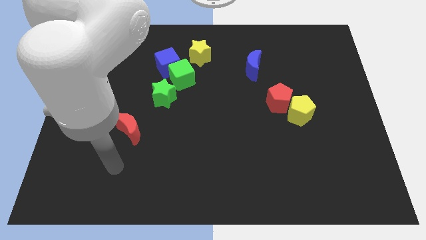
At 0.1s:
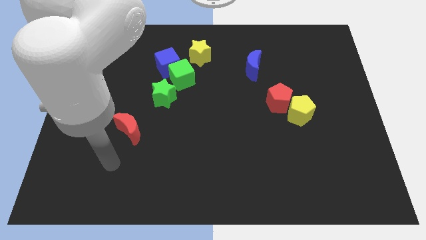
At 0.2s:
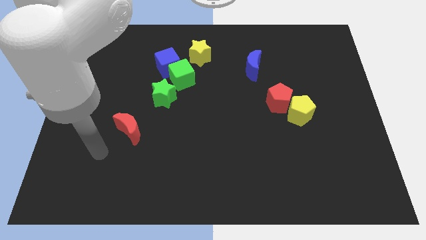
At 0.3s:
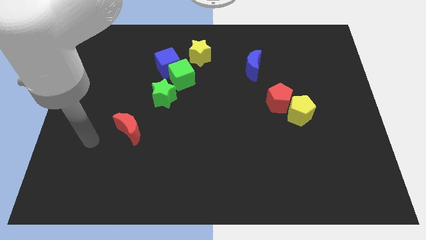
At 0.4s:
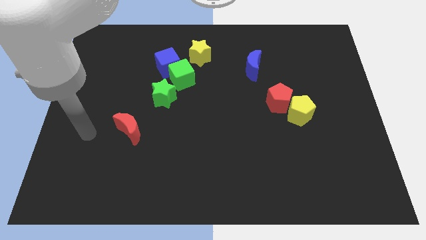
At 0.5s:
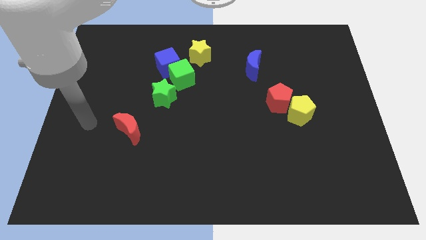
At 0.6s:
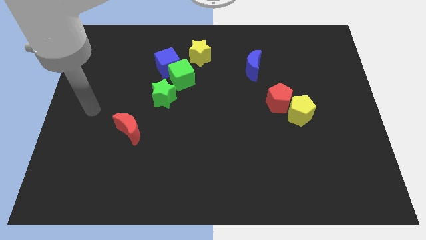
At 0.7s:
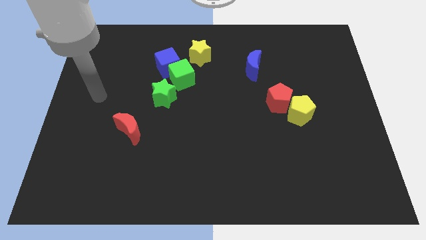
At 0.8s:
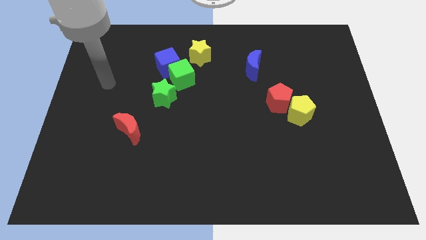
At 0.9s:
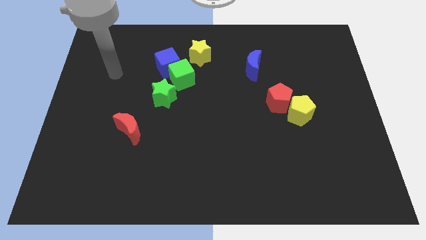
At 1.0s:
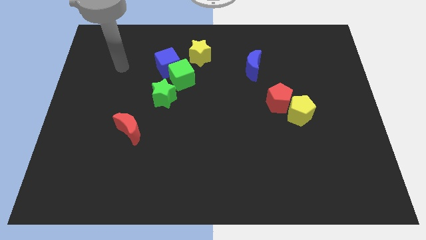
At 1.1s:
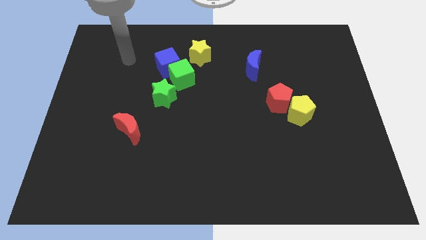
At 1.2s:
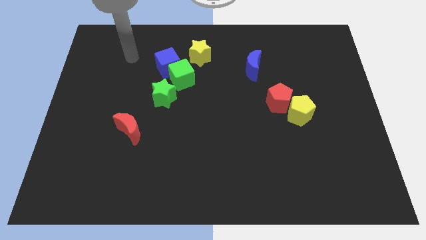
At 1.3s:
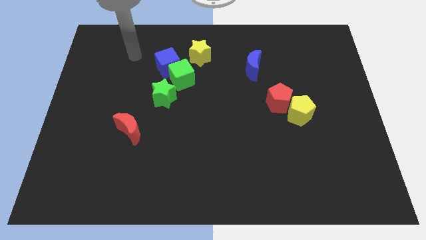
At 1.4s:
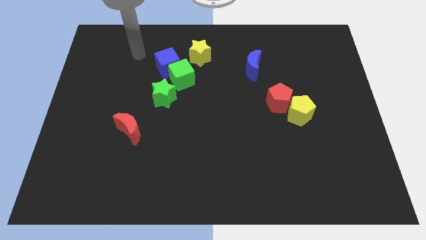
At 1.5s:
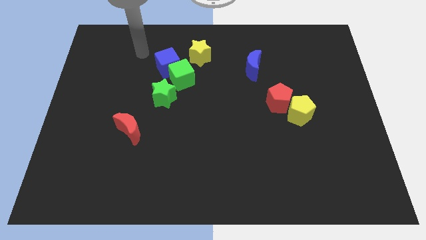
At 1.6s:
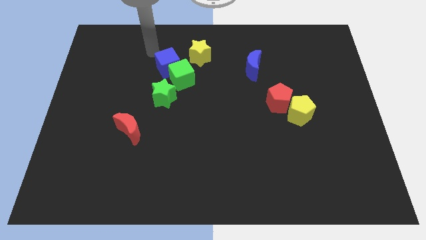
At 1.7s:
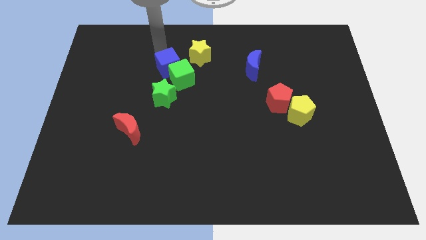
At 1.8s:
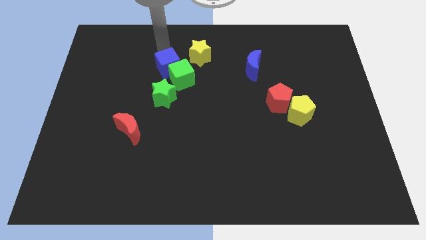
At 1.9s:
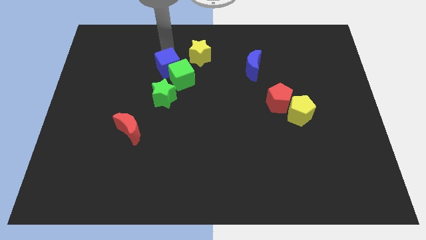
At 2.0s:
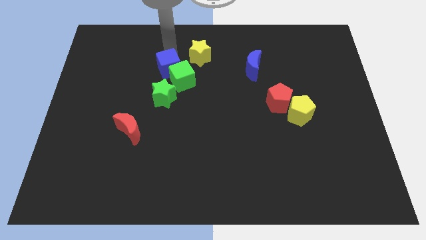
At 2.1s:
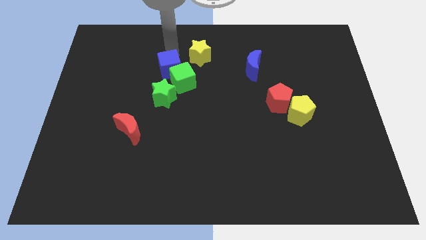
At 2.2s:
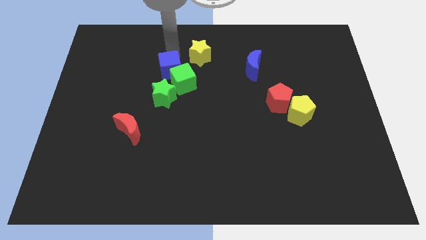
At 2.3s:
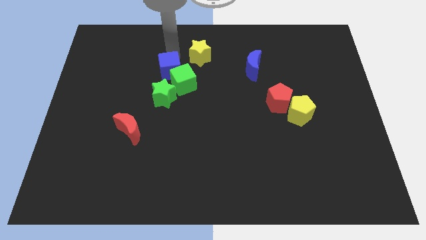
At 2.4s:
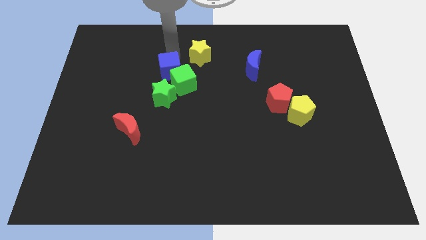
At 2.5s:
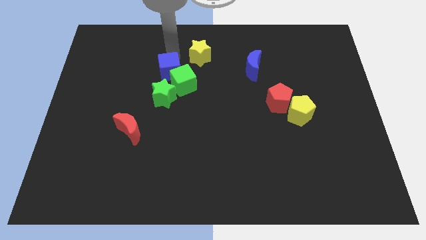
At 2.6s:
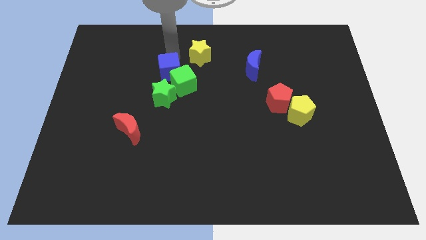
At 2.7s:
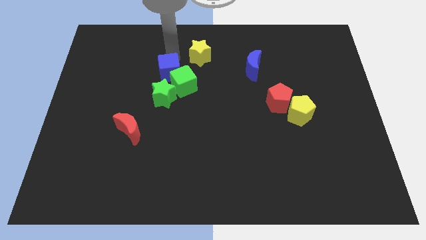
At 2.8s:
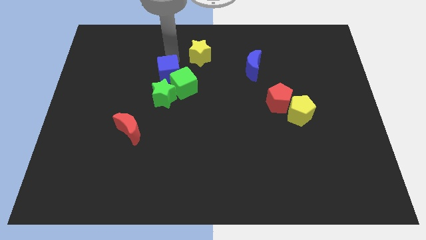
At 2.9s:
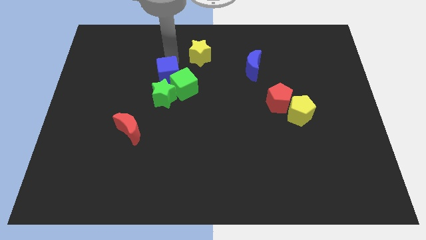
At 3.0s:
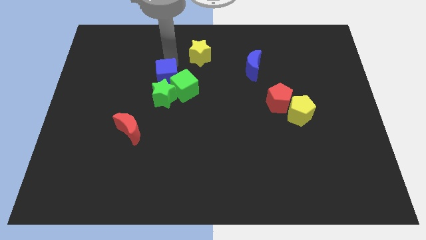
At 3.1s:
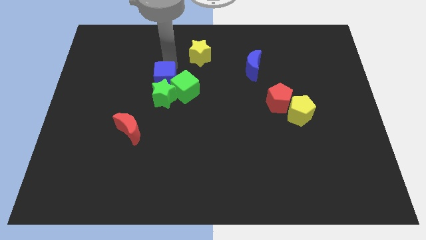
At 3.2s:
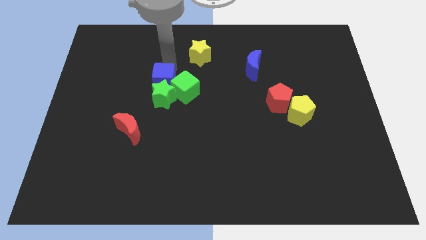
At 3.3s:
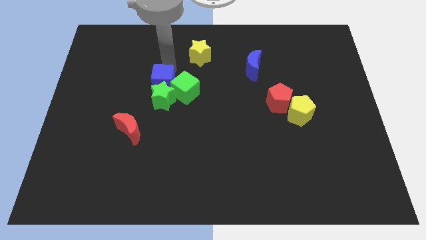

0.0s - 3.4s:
put the blue cube towards the green star

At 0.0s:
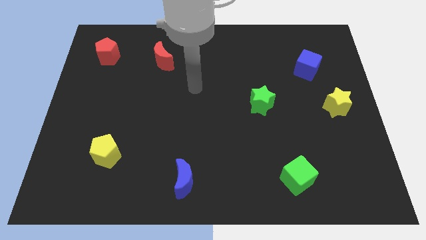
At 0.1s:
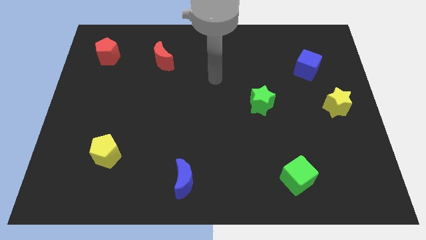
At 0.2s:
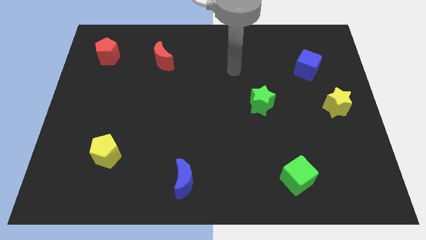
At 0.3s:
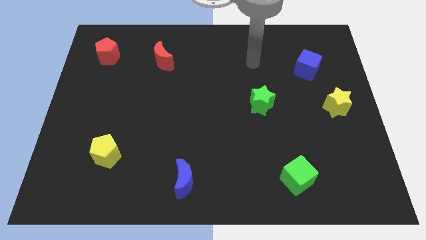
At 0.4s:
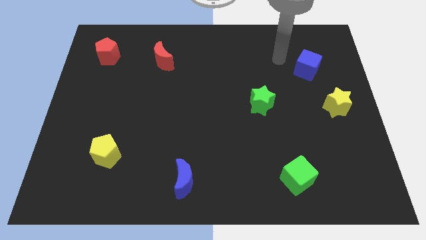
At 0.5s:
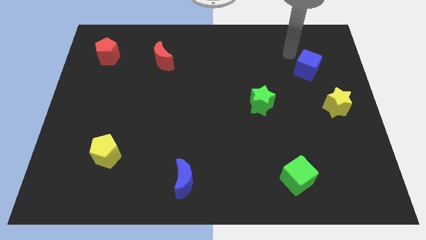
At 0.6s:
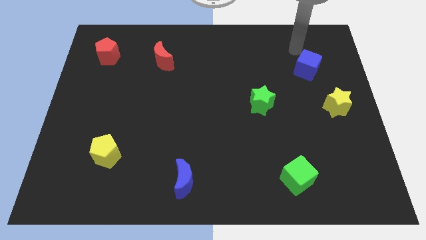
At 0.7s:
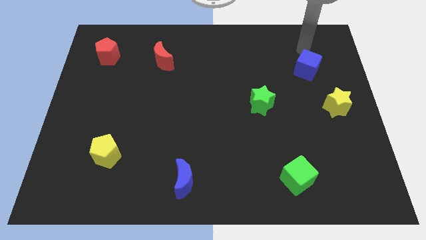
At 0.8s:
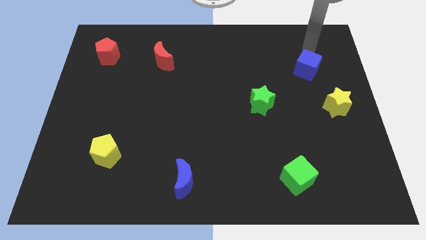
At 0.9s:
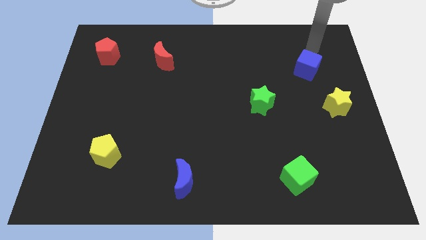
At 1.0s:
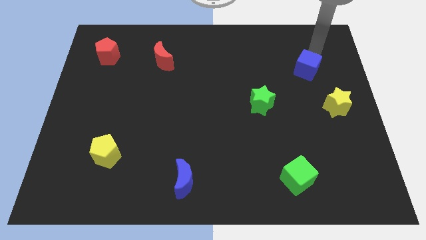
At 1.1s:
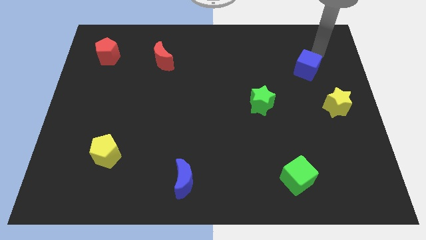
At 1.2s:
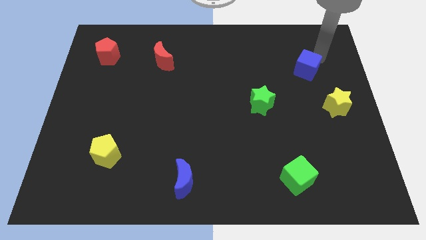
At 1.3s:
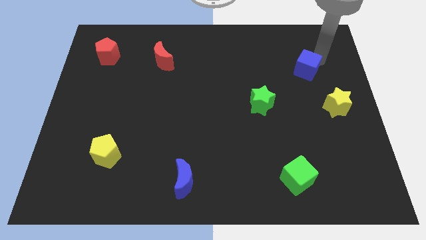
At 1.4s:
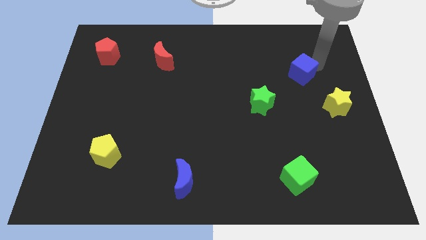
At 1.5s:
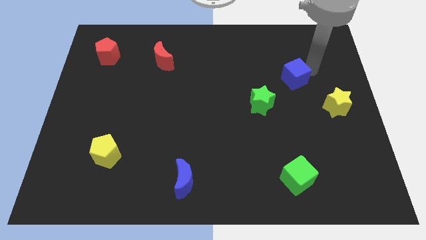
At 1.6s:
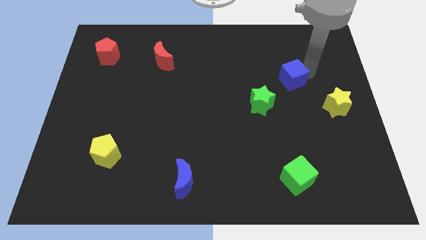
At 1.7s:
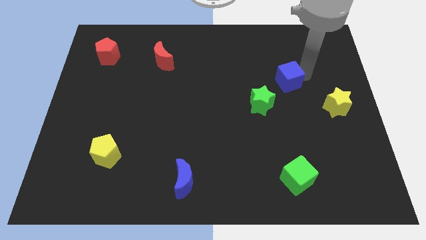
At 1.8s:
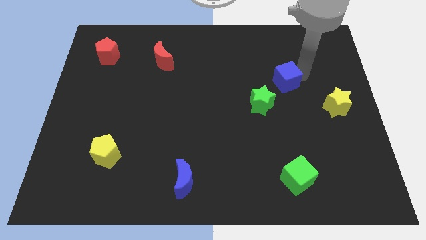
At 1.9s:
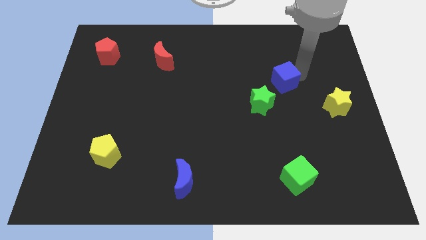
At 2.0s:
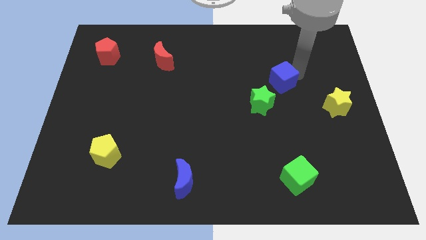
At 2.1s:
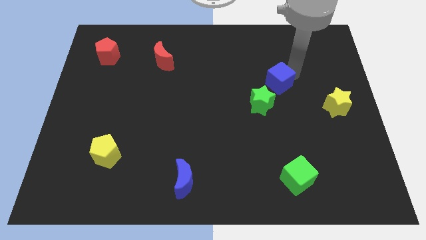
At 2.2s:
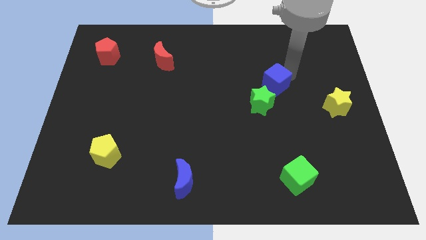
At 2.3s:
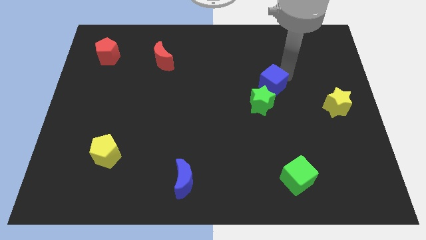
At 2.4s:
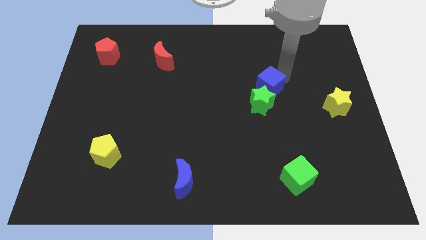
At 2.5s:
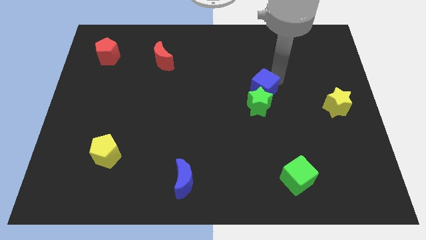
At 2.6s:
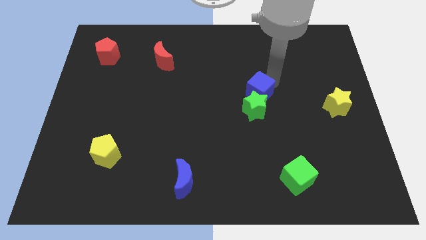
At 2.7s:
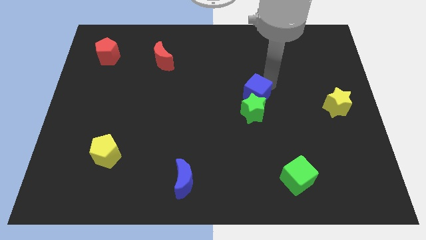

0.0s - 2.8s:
push the blue cube to the green star

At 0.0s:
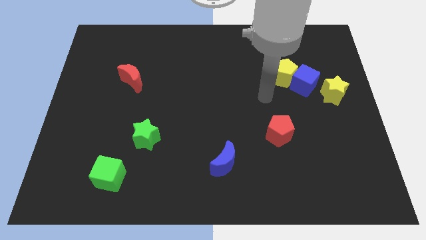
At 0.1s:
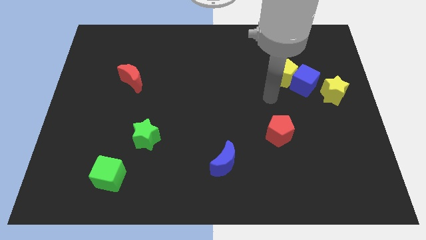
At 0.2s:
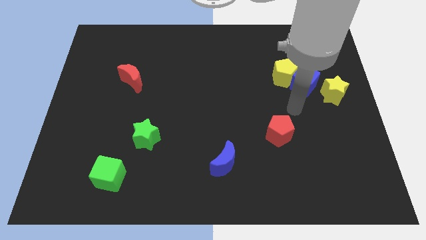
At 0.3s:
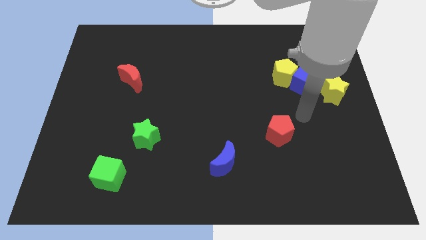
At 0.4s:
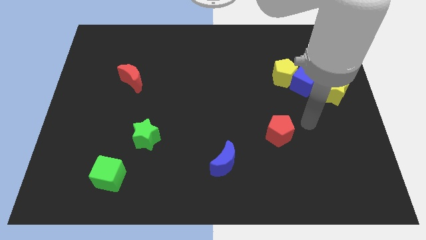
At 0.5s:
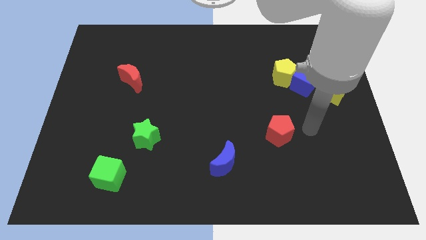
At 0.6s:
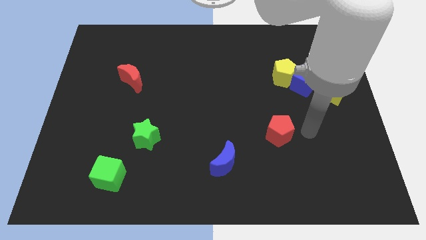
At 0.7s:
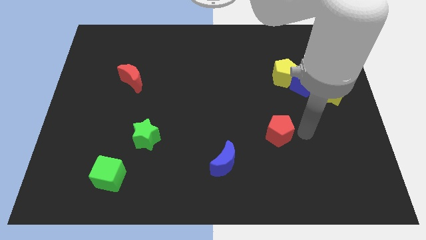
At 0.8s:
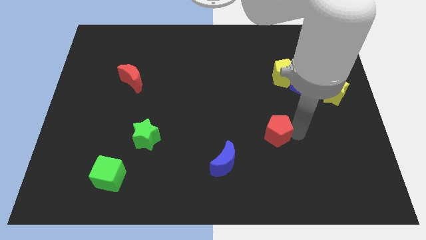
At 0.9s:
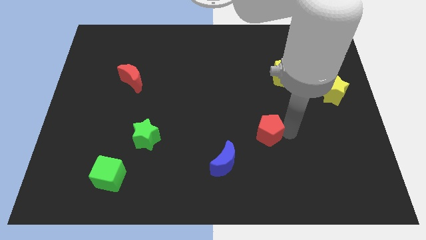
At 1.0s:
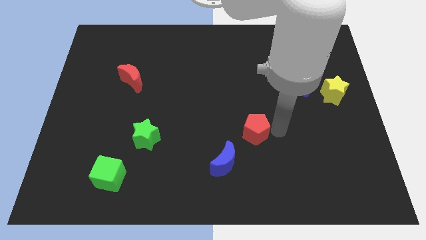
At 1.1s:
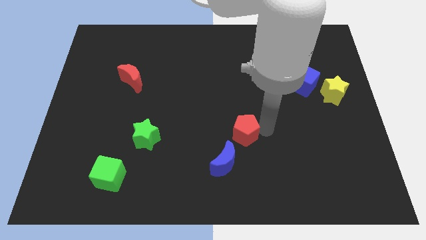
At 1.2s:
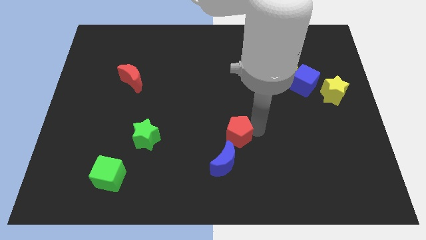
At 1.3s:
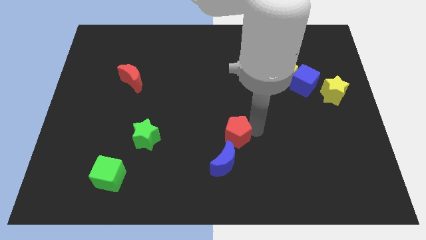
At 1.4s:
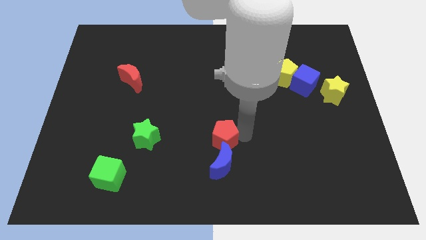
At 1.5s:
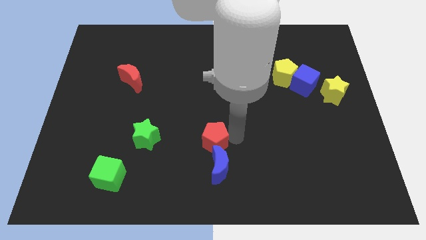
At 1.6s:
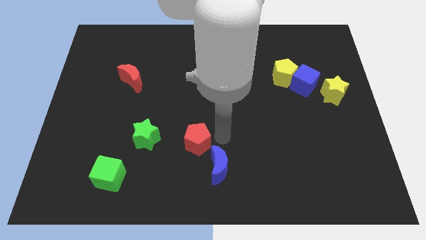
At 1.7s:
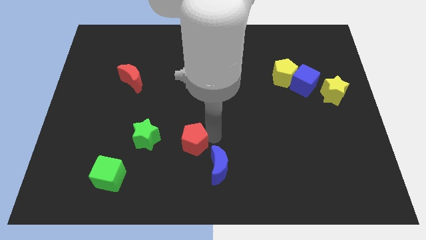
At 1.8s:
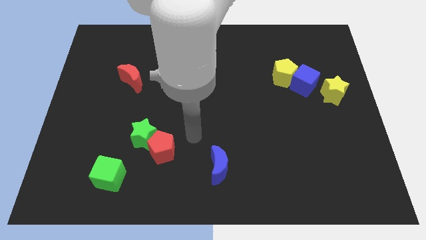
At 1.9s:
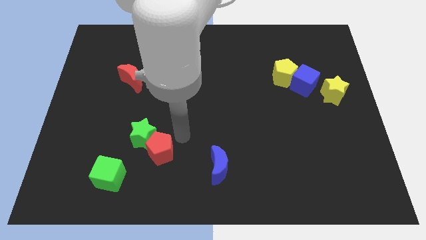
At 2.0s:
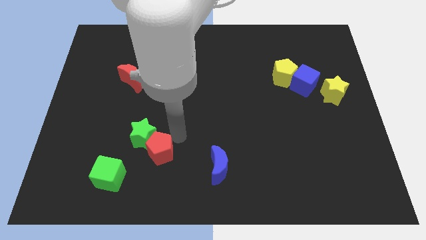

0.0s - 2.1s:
put the red pentagon next to the green star

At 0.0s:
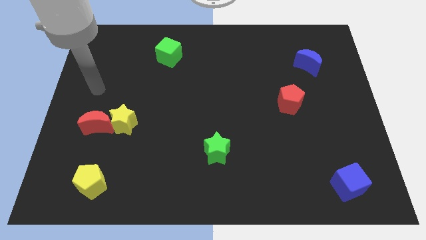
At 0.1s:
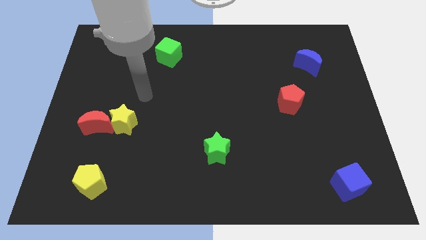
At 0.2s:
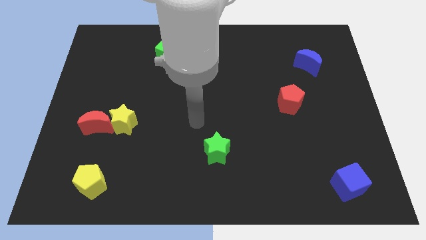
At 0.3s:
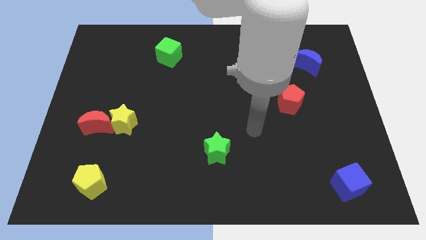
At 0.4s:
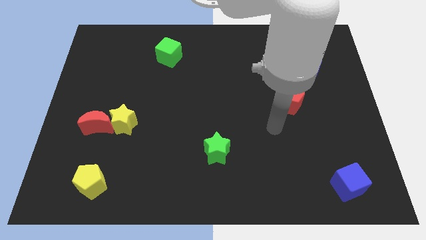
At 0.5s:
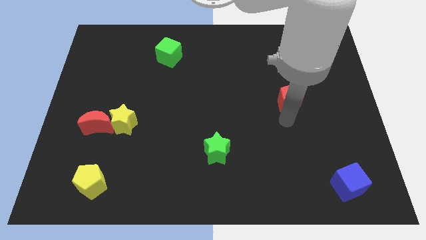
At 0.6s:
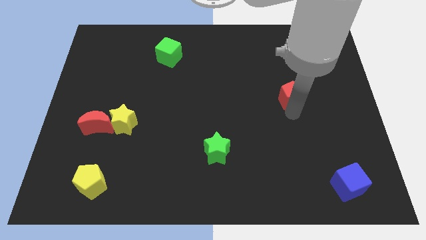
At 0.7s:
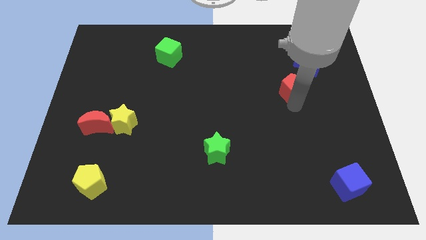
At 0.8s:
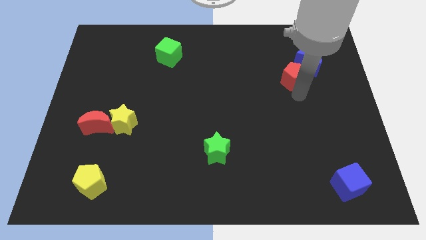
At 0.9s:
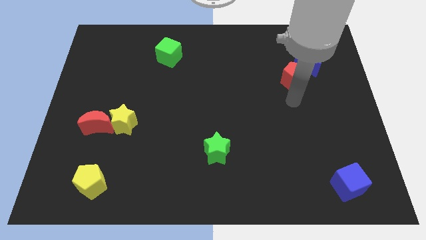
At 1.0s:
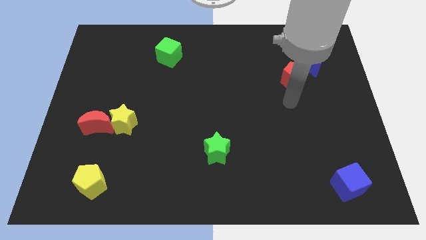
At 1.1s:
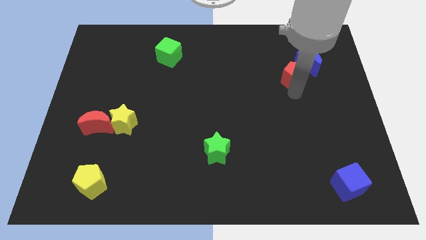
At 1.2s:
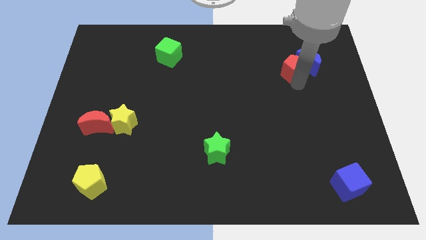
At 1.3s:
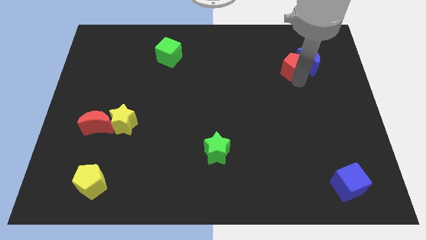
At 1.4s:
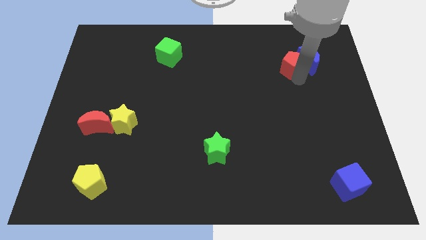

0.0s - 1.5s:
slide the red pentagon towards the blue moon
